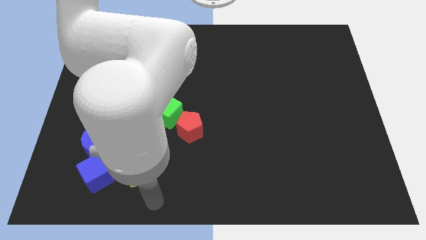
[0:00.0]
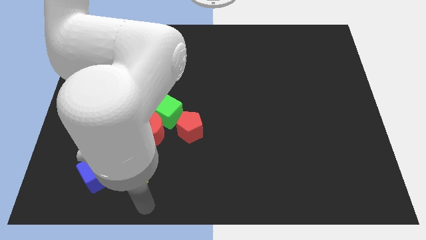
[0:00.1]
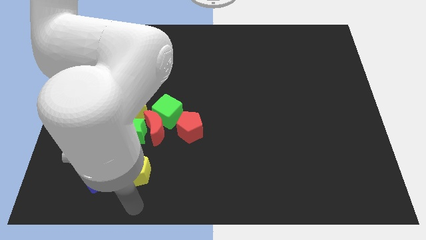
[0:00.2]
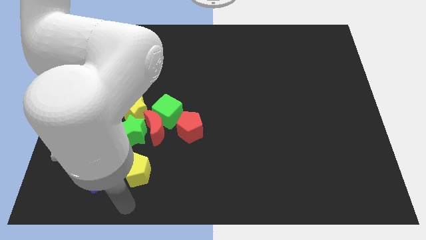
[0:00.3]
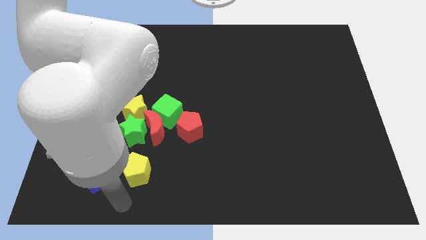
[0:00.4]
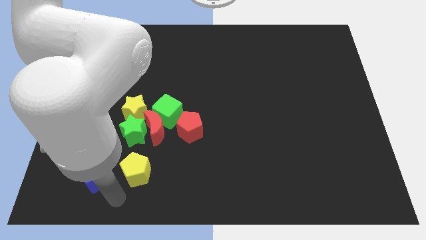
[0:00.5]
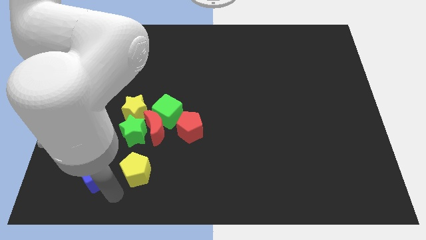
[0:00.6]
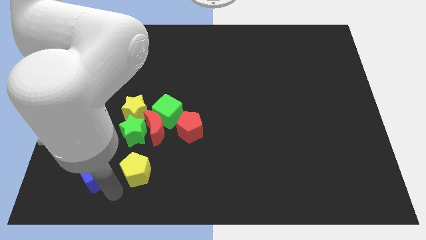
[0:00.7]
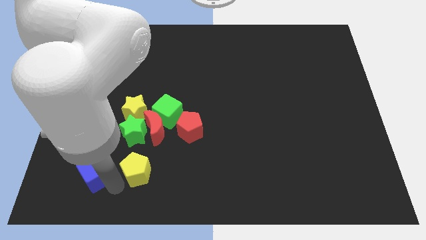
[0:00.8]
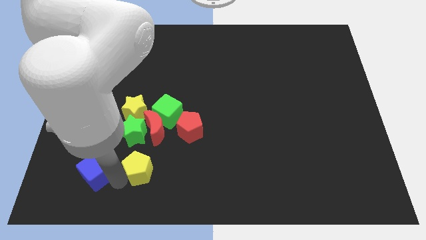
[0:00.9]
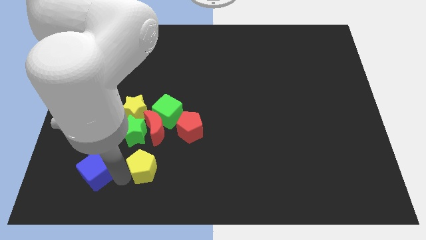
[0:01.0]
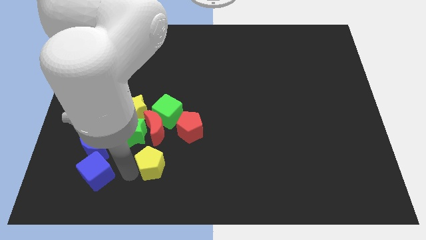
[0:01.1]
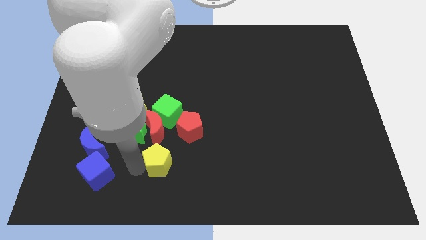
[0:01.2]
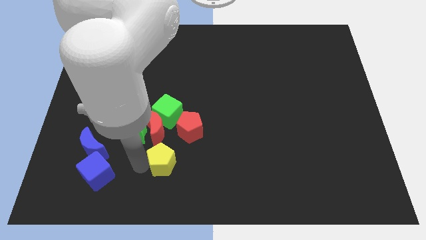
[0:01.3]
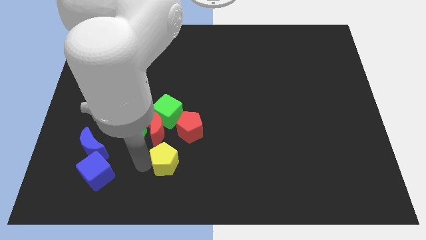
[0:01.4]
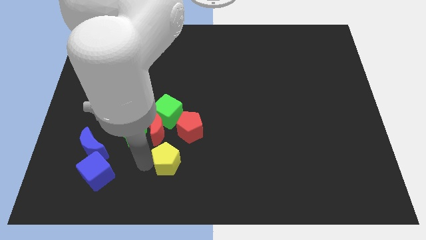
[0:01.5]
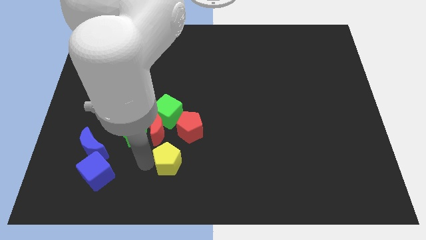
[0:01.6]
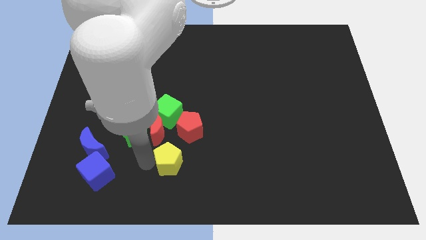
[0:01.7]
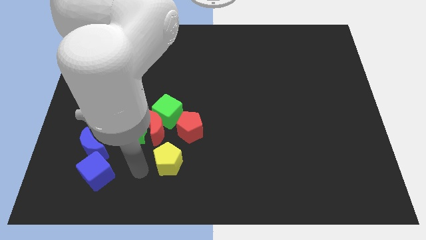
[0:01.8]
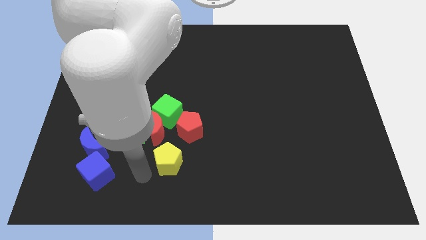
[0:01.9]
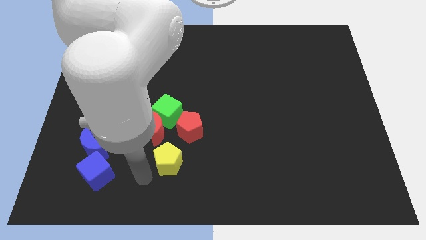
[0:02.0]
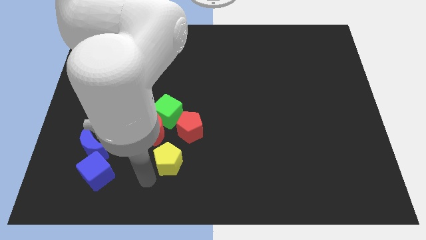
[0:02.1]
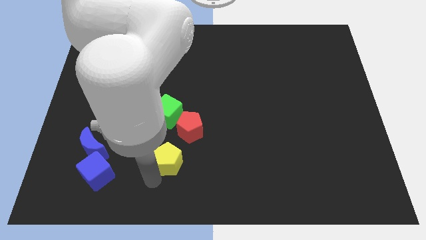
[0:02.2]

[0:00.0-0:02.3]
slide the yellow pentagon slightly to the right

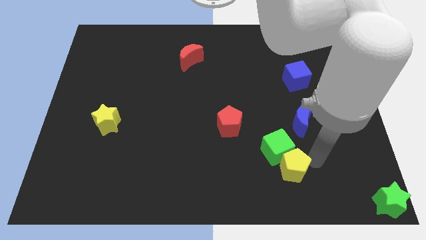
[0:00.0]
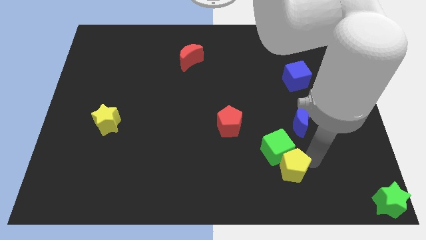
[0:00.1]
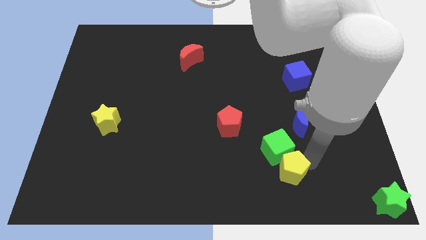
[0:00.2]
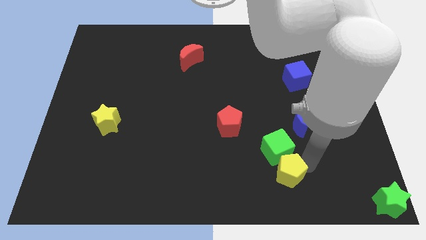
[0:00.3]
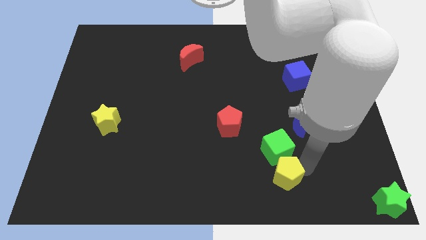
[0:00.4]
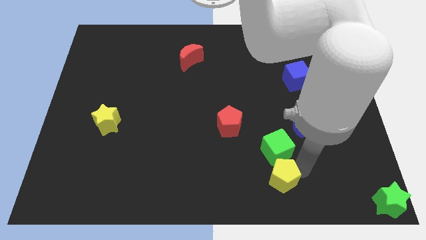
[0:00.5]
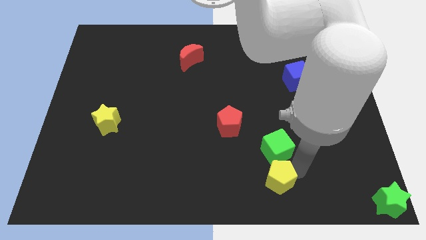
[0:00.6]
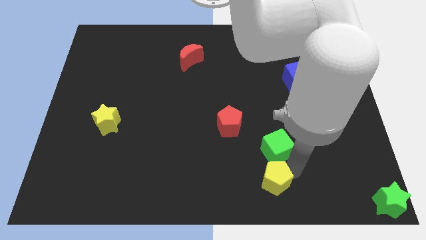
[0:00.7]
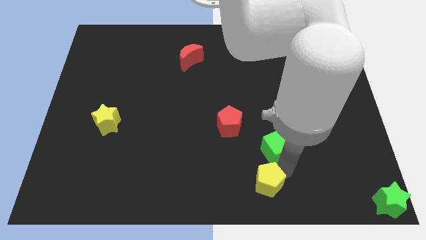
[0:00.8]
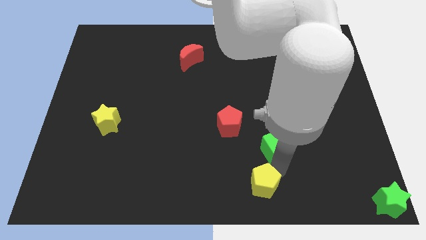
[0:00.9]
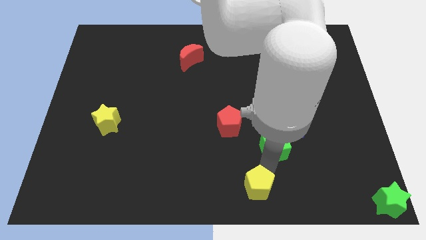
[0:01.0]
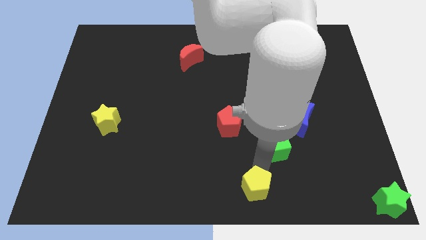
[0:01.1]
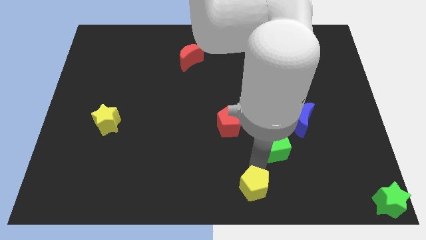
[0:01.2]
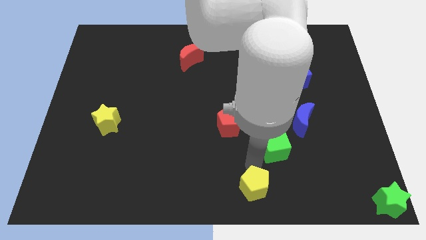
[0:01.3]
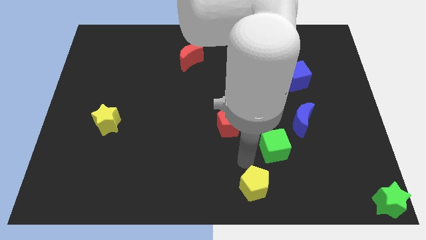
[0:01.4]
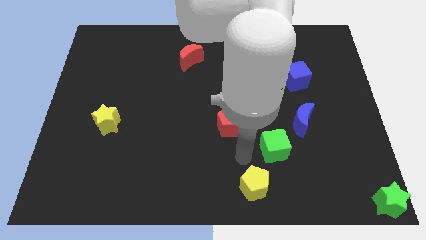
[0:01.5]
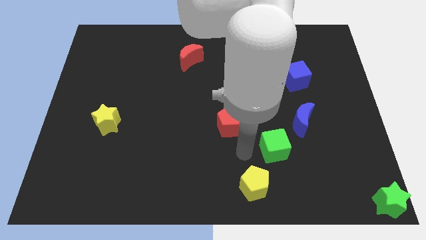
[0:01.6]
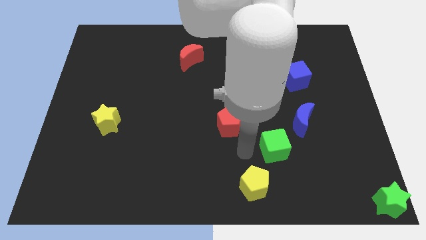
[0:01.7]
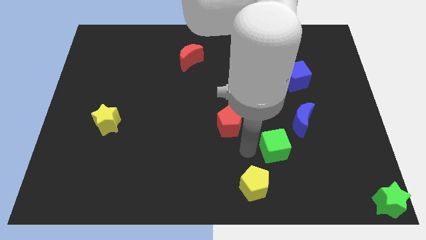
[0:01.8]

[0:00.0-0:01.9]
separate the yellow pentagon from the green cube

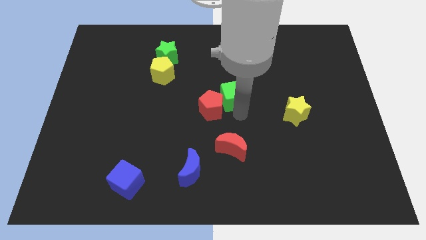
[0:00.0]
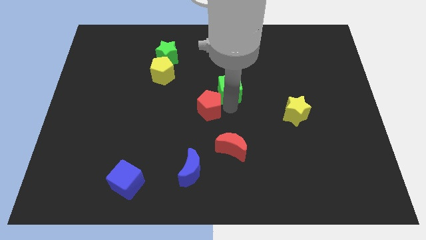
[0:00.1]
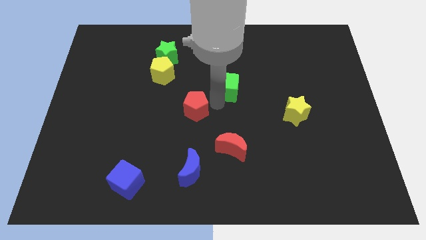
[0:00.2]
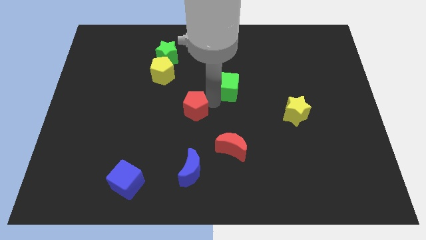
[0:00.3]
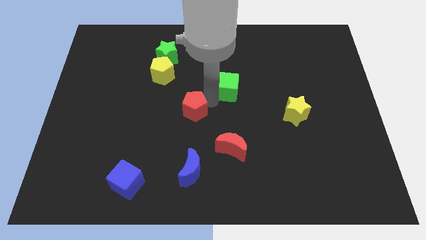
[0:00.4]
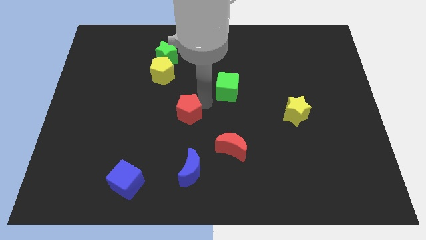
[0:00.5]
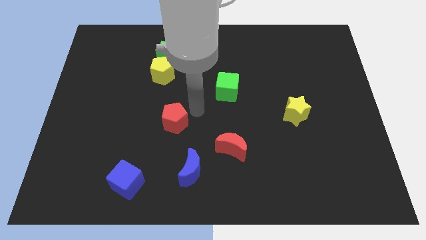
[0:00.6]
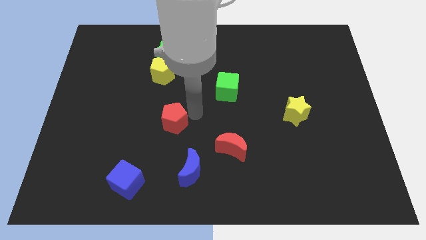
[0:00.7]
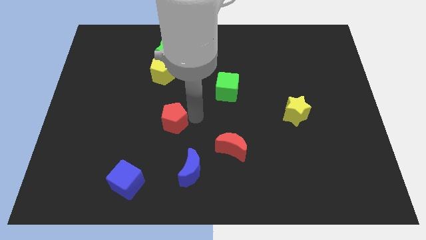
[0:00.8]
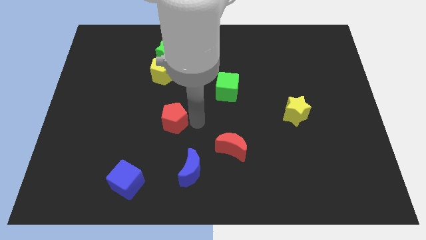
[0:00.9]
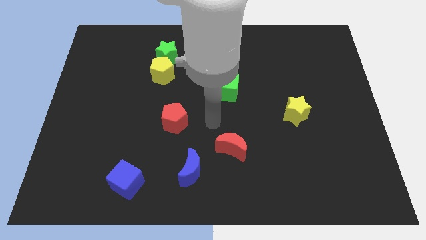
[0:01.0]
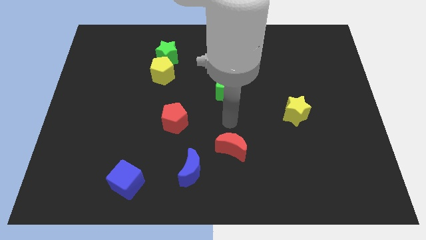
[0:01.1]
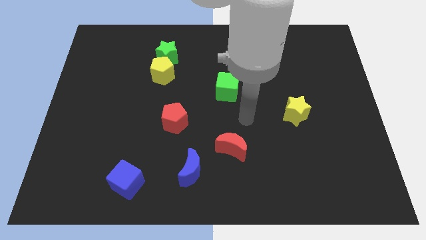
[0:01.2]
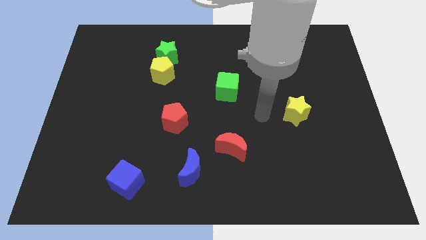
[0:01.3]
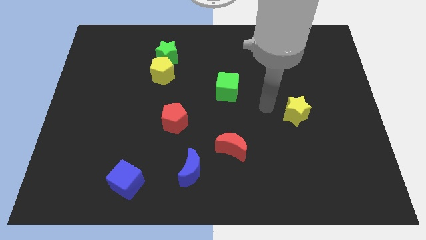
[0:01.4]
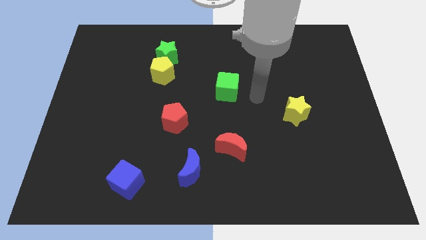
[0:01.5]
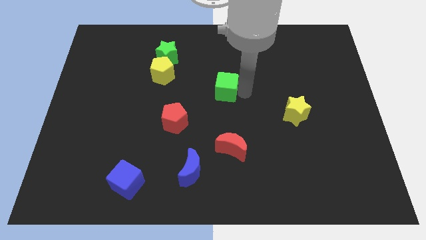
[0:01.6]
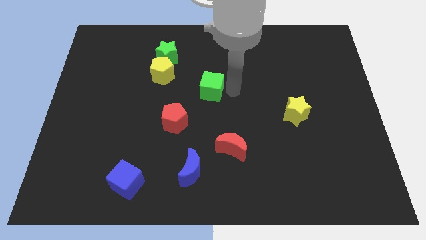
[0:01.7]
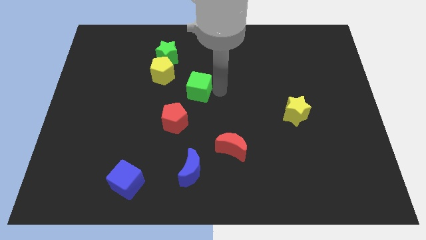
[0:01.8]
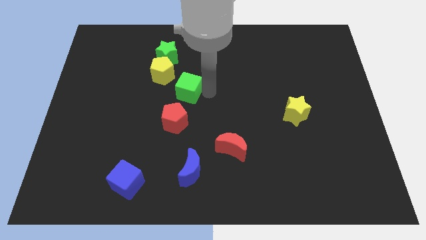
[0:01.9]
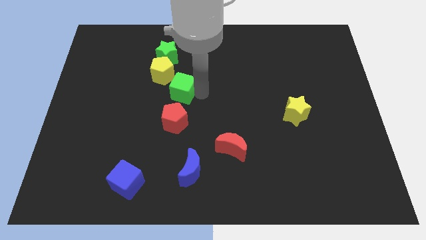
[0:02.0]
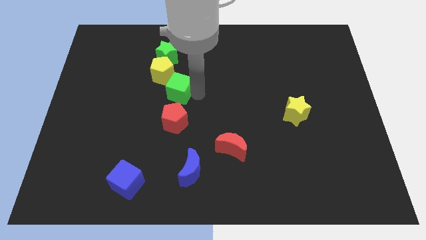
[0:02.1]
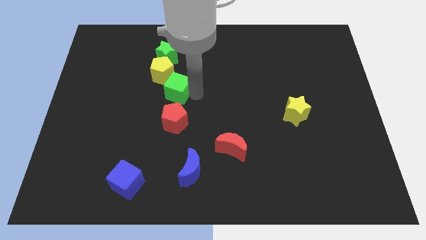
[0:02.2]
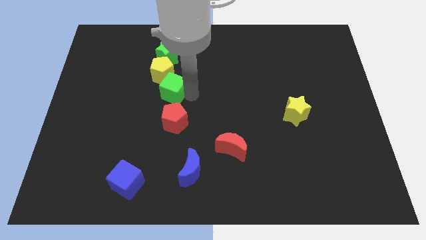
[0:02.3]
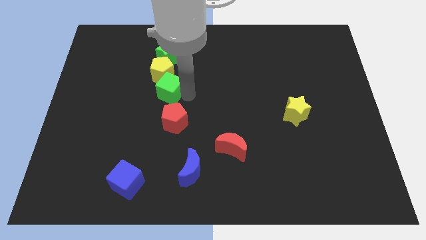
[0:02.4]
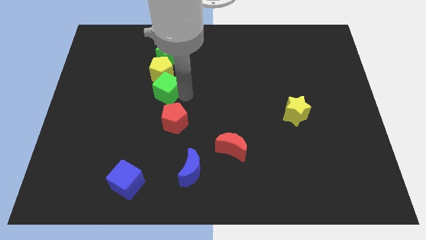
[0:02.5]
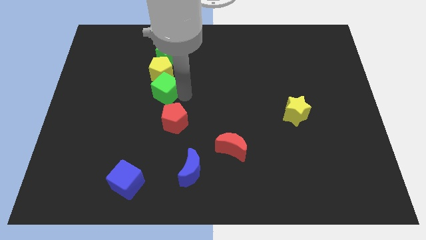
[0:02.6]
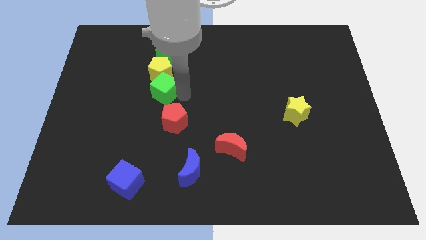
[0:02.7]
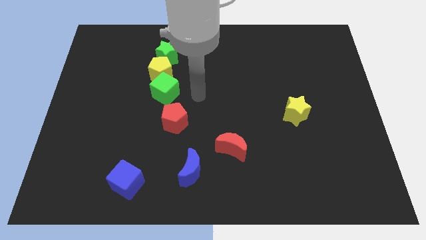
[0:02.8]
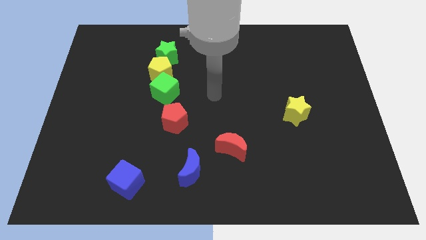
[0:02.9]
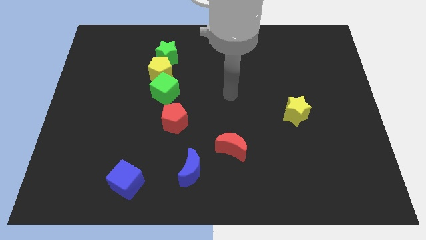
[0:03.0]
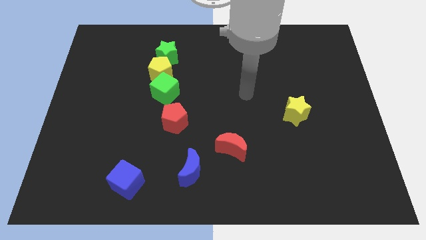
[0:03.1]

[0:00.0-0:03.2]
move the green cube below to the yellow pentagon

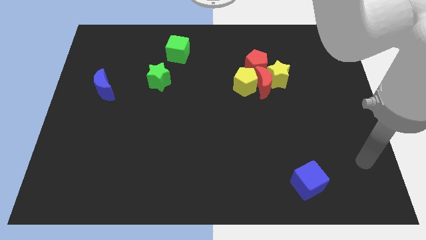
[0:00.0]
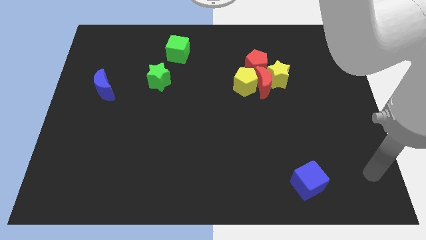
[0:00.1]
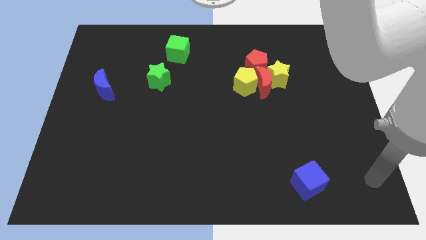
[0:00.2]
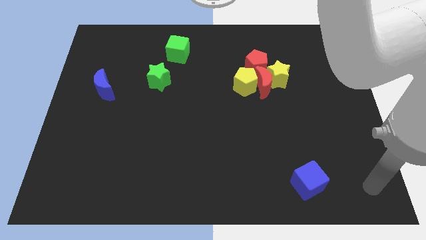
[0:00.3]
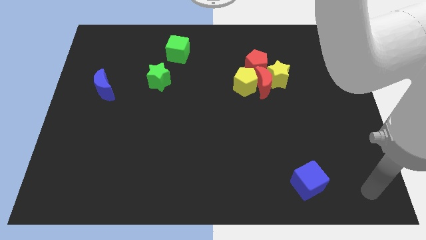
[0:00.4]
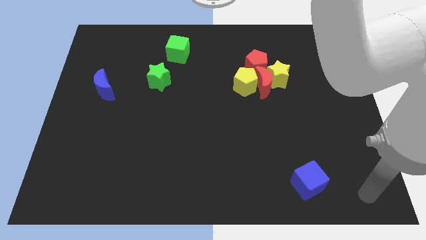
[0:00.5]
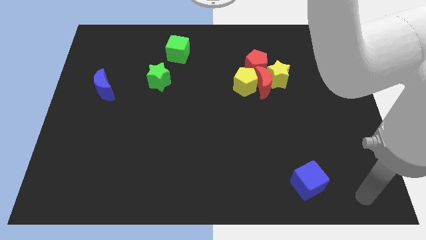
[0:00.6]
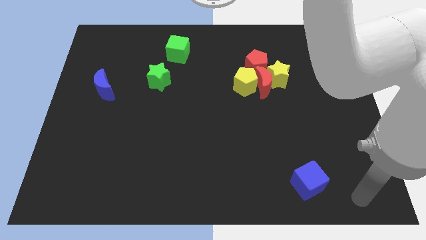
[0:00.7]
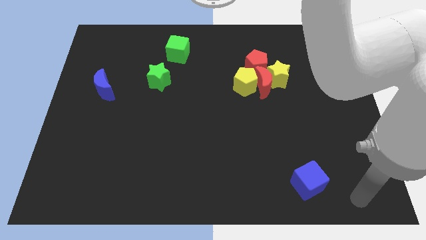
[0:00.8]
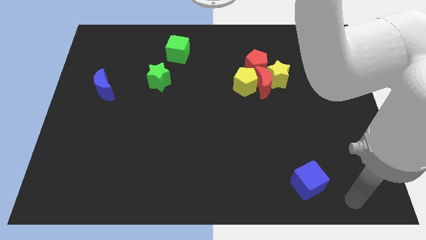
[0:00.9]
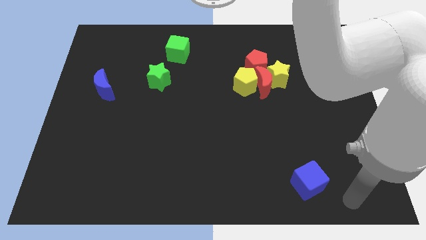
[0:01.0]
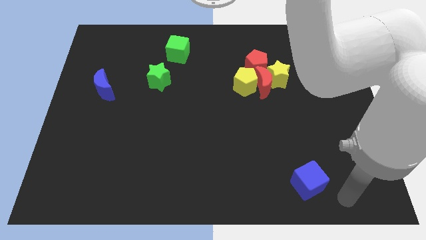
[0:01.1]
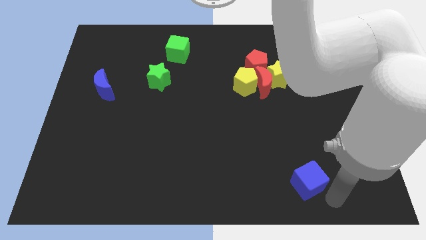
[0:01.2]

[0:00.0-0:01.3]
move your arm towards the bottom side of the blue cube

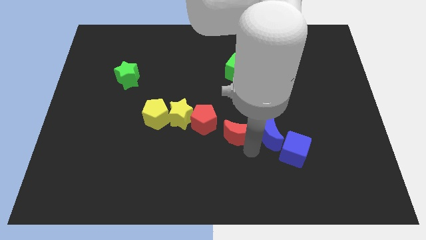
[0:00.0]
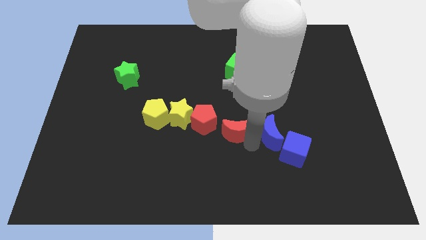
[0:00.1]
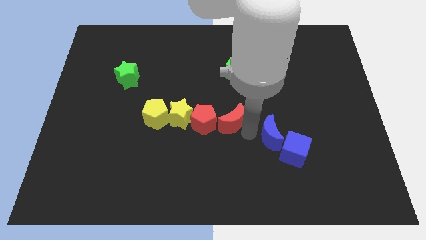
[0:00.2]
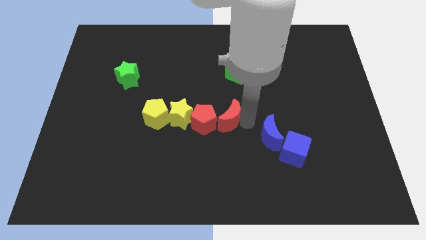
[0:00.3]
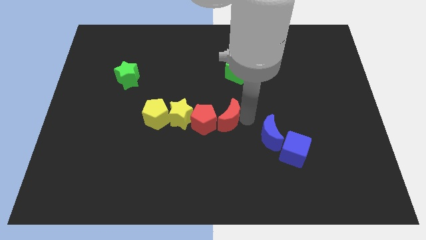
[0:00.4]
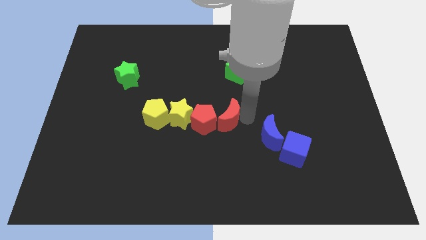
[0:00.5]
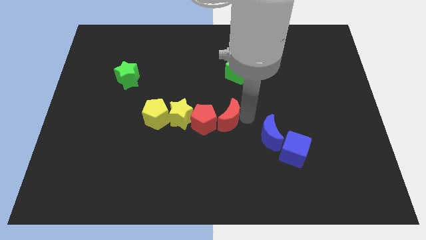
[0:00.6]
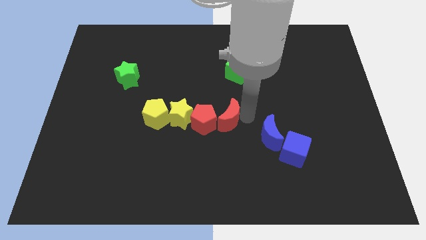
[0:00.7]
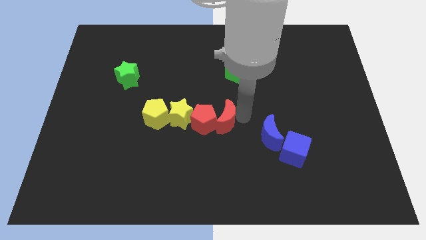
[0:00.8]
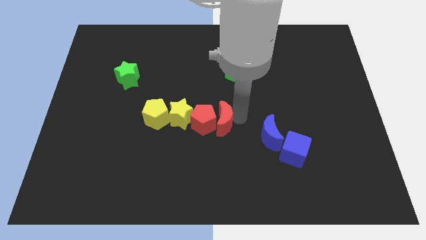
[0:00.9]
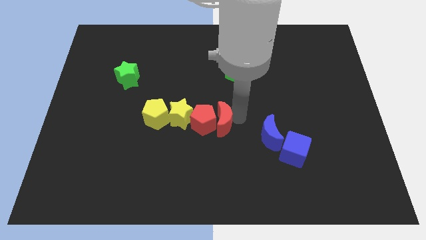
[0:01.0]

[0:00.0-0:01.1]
push red moon into red pentagon
